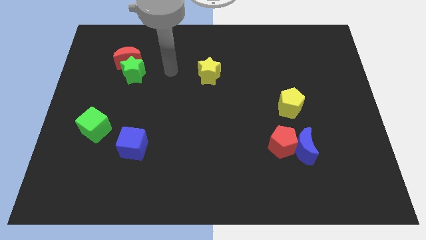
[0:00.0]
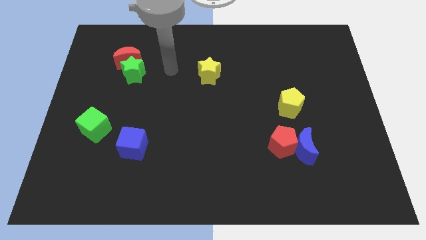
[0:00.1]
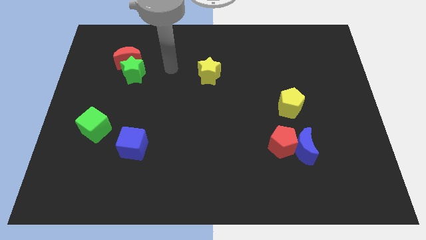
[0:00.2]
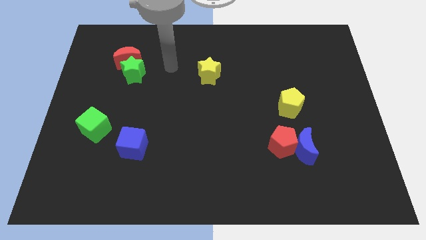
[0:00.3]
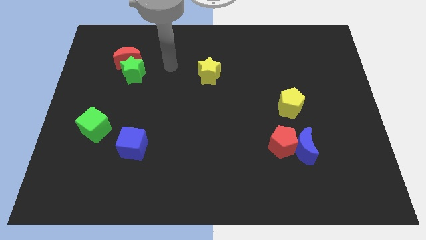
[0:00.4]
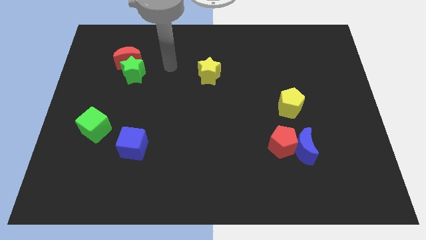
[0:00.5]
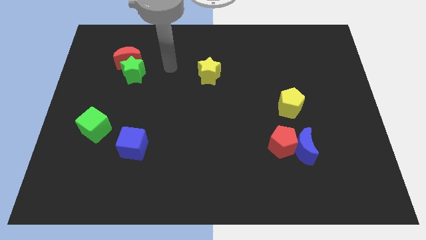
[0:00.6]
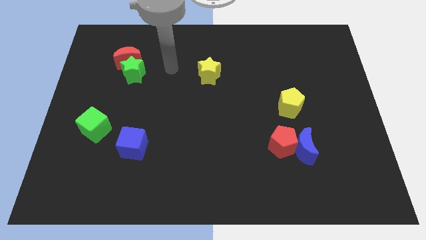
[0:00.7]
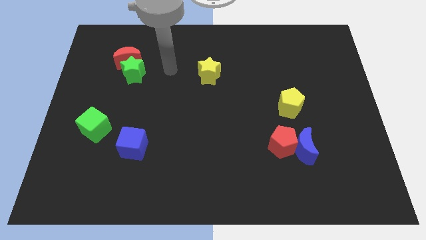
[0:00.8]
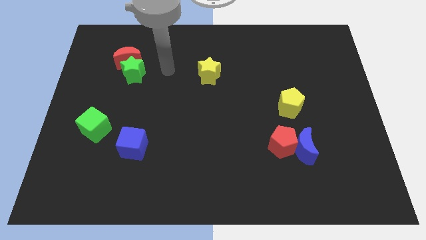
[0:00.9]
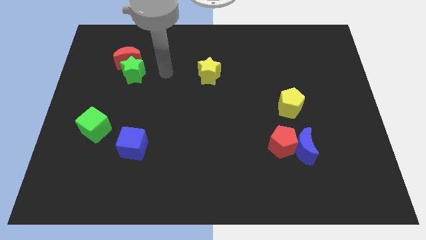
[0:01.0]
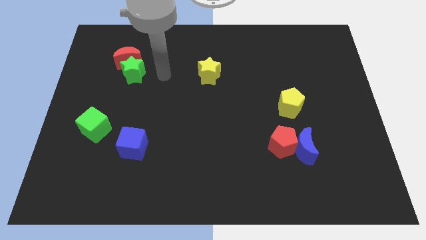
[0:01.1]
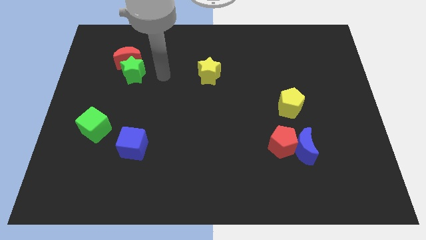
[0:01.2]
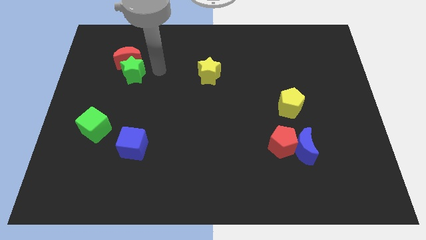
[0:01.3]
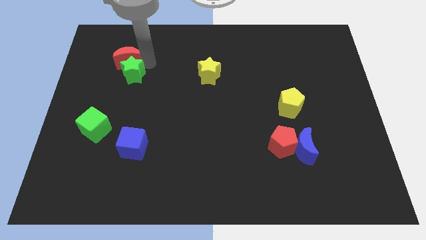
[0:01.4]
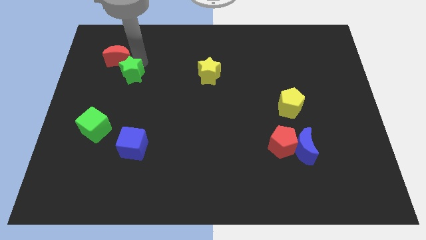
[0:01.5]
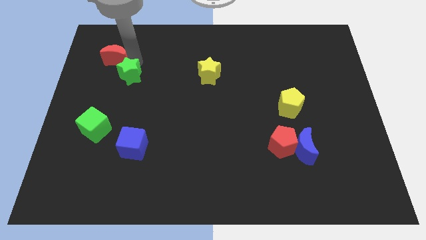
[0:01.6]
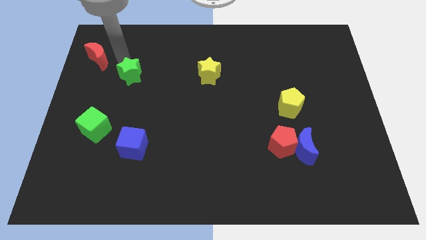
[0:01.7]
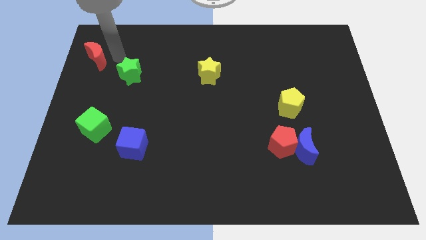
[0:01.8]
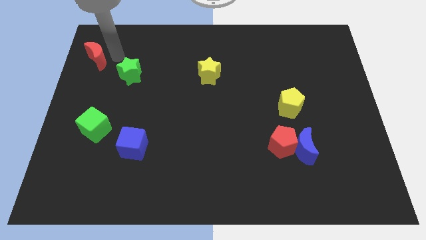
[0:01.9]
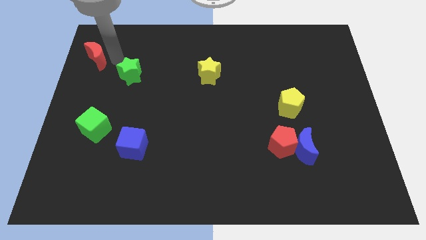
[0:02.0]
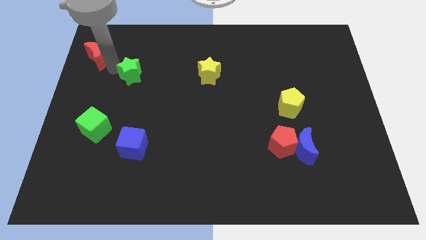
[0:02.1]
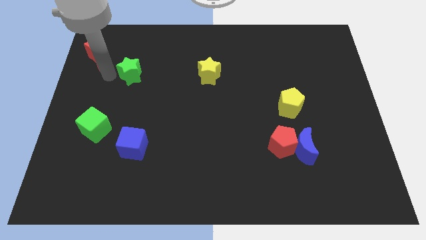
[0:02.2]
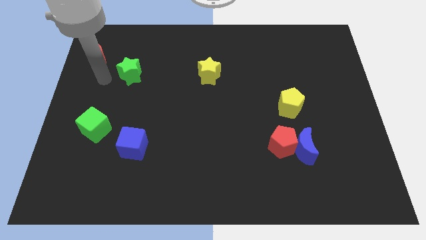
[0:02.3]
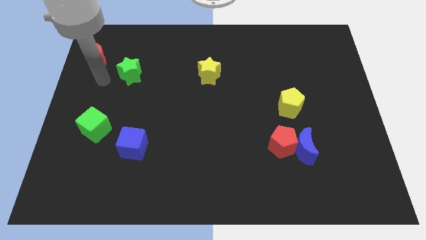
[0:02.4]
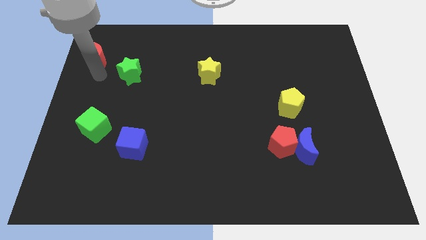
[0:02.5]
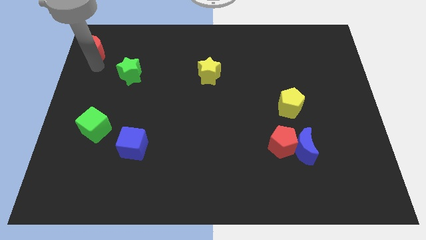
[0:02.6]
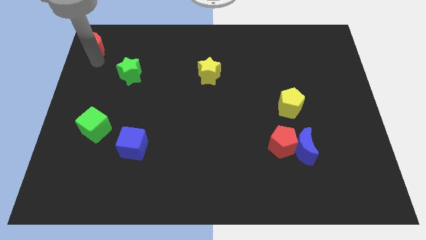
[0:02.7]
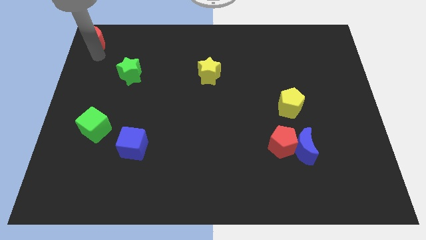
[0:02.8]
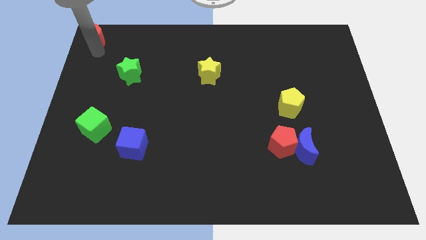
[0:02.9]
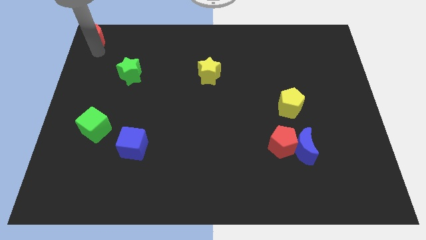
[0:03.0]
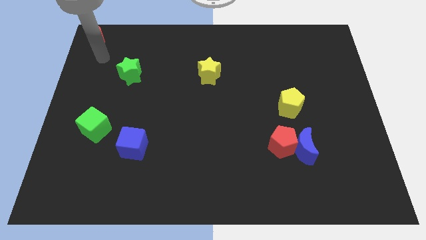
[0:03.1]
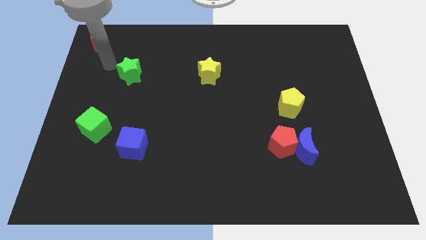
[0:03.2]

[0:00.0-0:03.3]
push the red moon towards the top left corner of the board

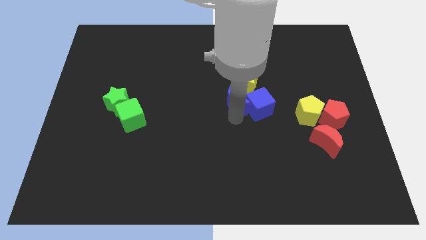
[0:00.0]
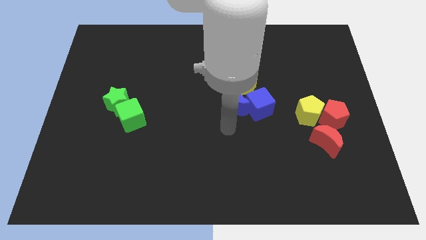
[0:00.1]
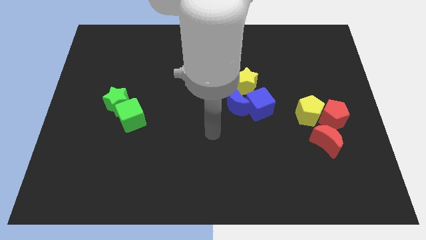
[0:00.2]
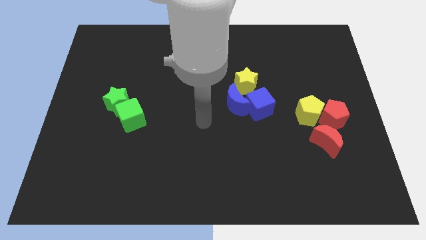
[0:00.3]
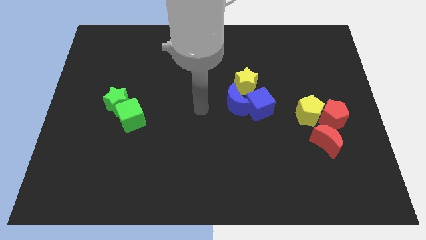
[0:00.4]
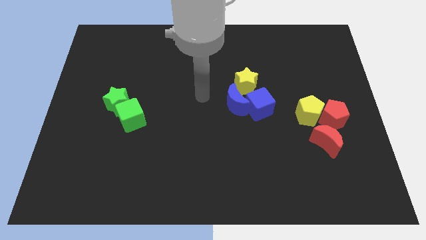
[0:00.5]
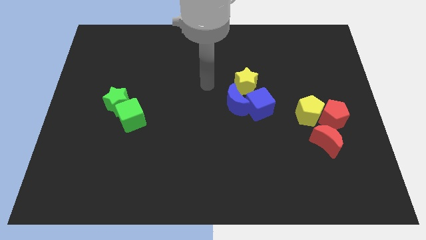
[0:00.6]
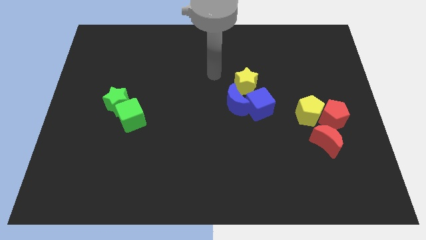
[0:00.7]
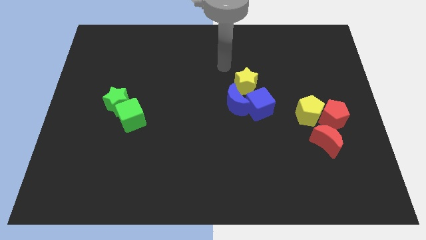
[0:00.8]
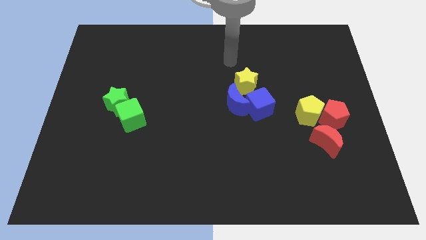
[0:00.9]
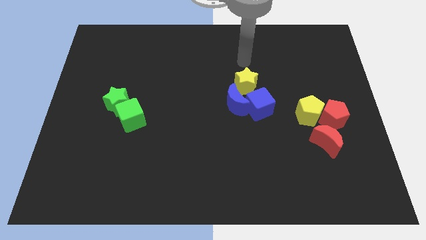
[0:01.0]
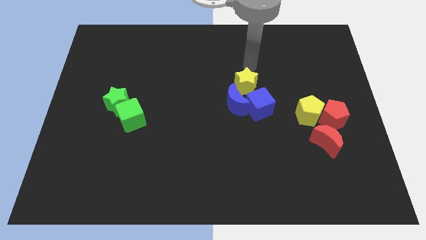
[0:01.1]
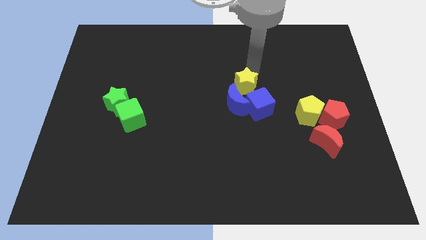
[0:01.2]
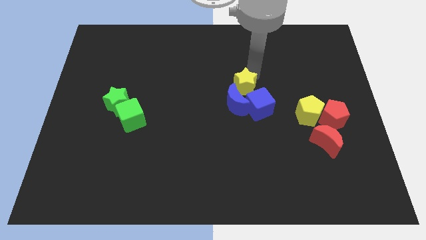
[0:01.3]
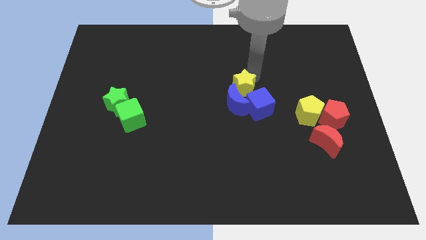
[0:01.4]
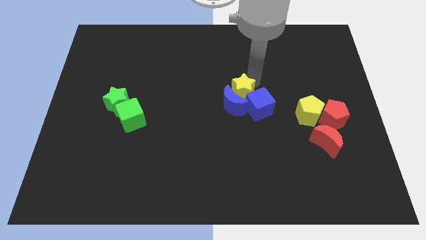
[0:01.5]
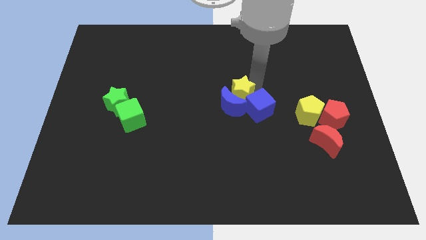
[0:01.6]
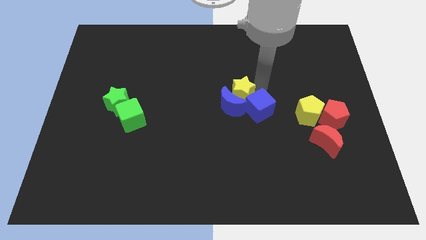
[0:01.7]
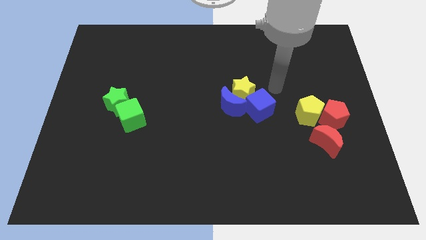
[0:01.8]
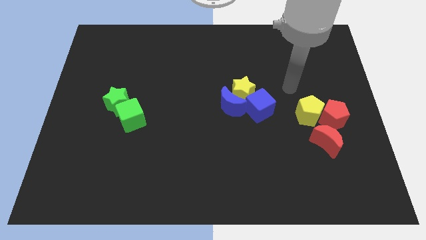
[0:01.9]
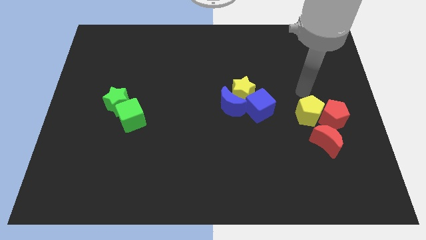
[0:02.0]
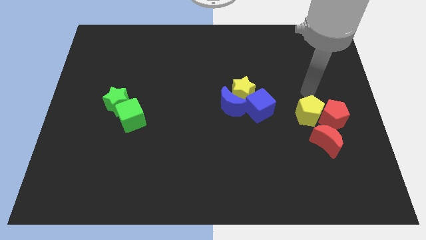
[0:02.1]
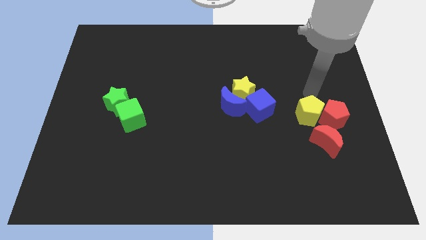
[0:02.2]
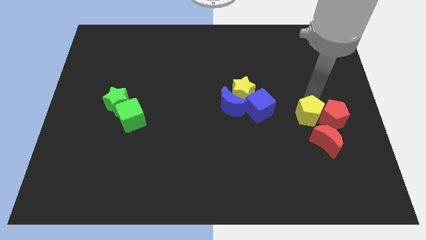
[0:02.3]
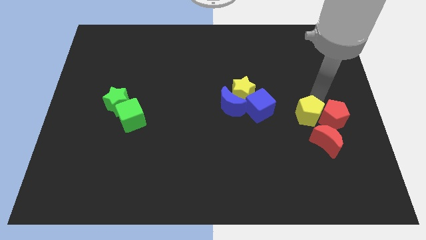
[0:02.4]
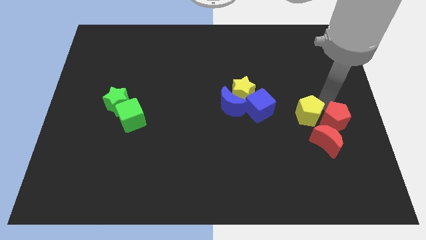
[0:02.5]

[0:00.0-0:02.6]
slightly move the yellow star to the top of the blue crescent

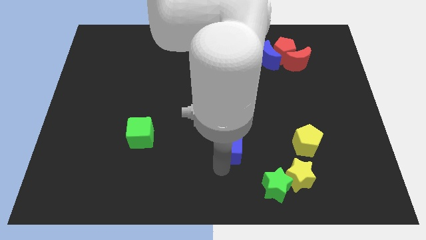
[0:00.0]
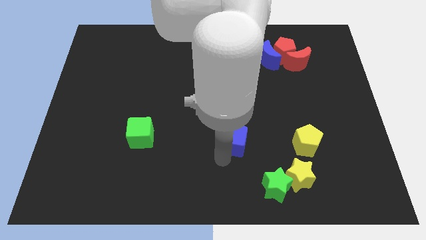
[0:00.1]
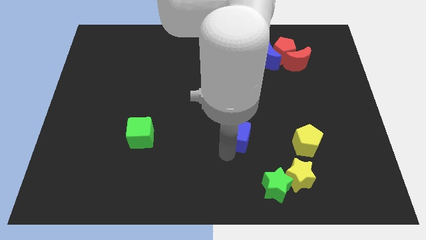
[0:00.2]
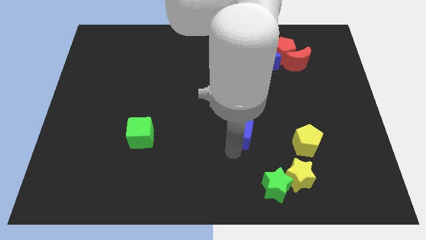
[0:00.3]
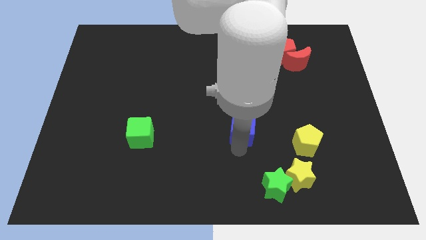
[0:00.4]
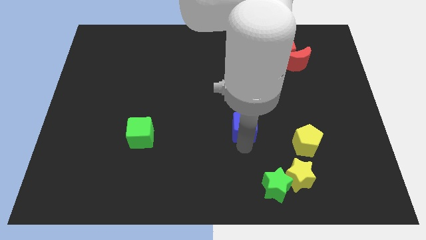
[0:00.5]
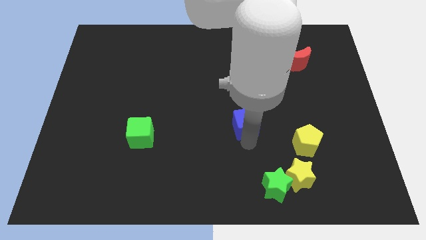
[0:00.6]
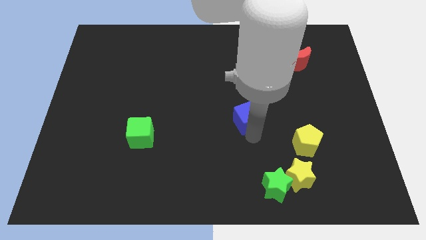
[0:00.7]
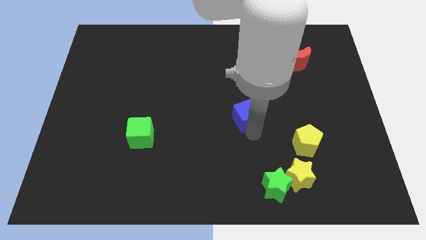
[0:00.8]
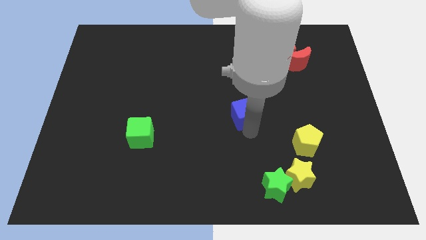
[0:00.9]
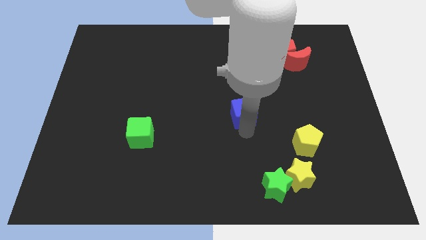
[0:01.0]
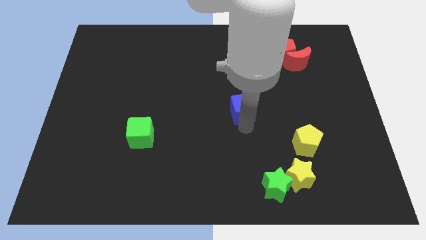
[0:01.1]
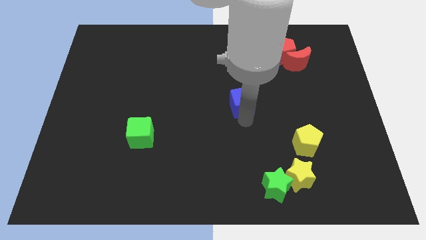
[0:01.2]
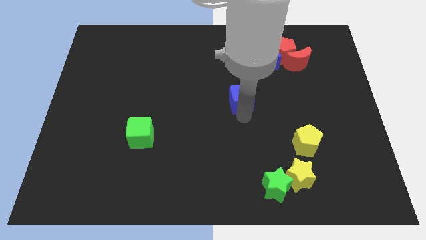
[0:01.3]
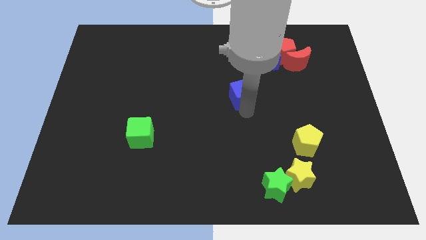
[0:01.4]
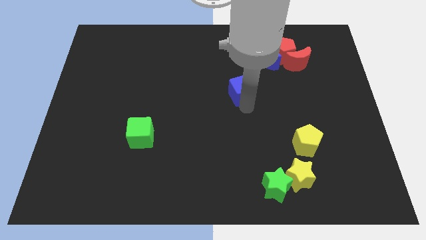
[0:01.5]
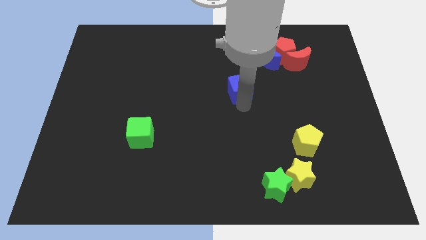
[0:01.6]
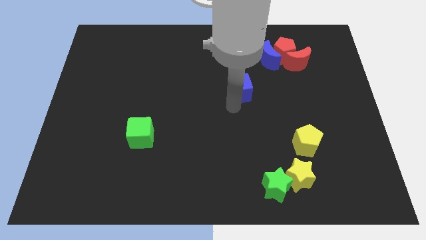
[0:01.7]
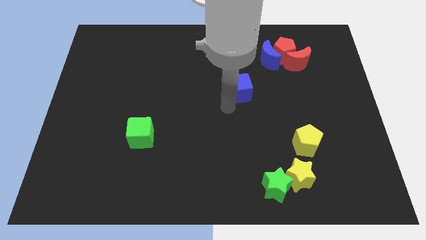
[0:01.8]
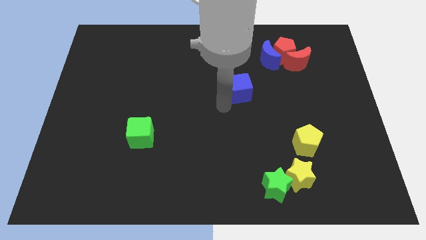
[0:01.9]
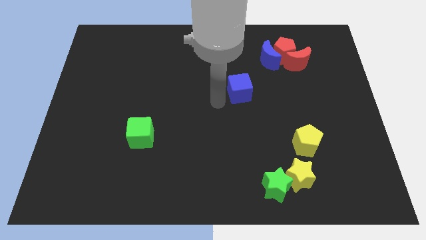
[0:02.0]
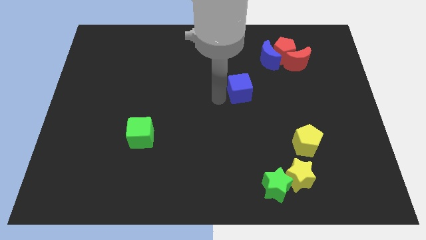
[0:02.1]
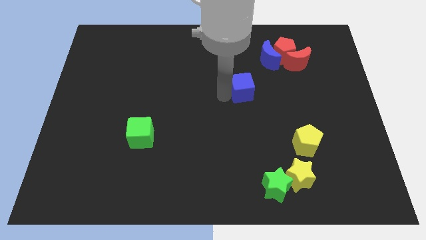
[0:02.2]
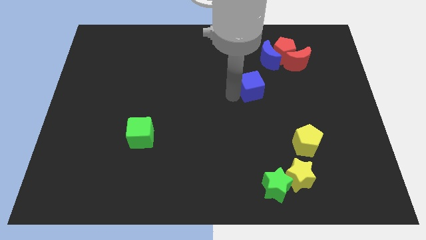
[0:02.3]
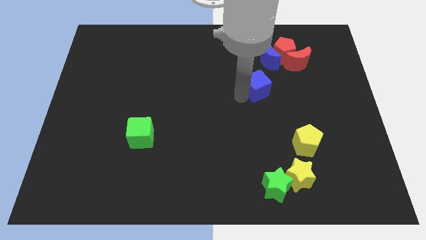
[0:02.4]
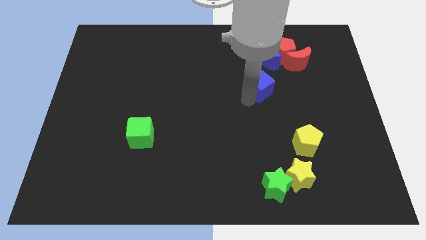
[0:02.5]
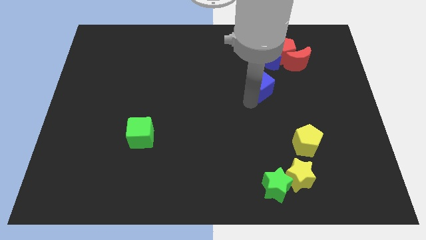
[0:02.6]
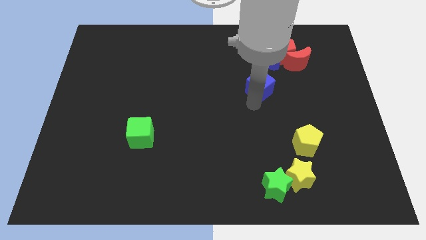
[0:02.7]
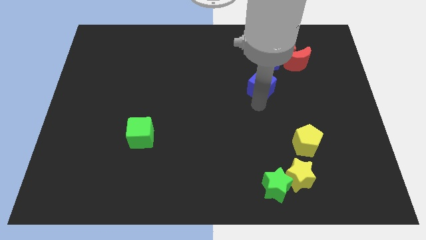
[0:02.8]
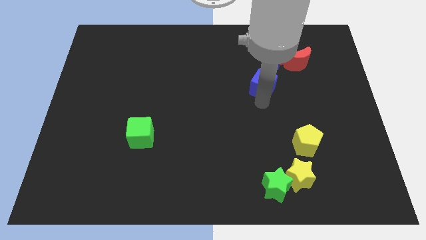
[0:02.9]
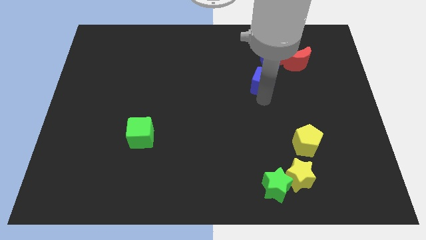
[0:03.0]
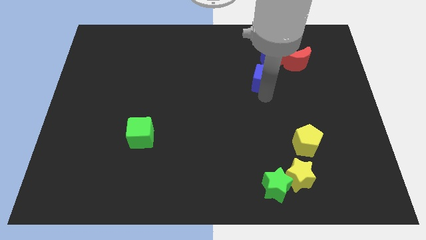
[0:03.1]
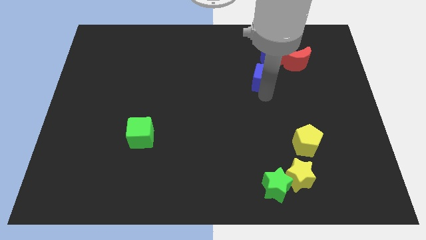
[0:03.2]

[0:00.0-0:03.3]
move the blue cube towards bottom of blue moon
